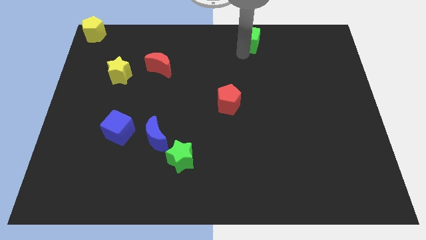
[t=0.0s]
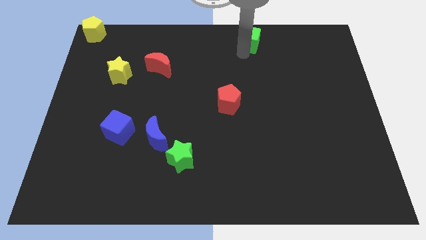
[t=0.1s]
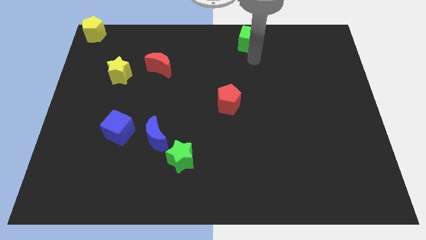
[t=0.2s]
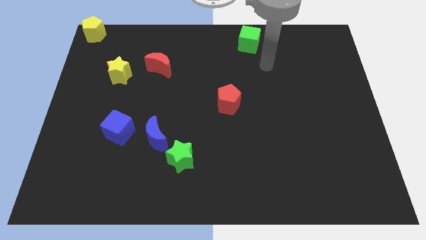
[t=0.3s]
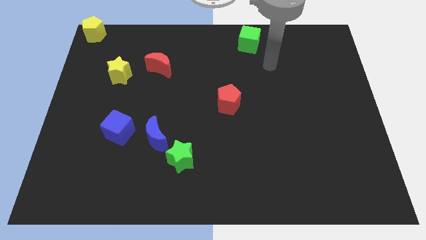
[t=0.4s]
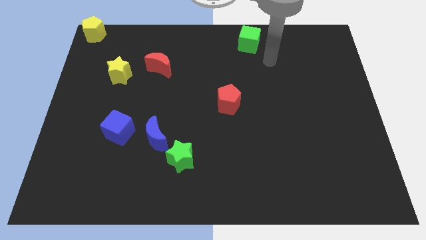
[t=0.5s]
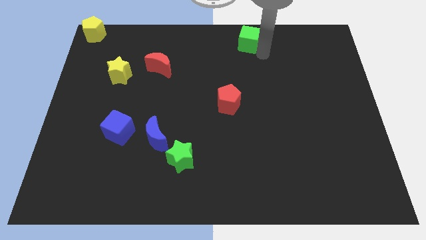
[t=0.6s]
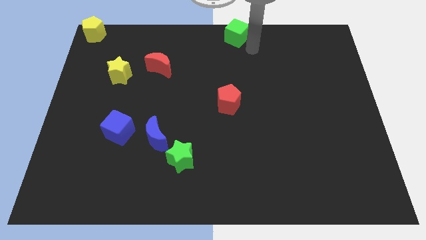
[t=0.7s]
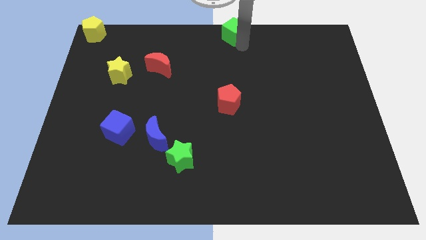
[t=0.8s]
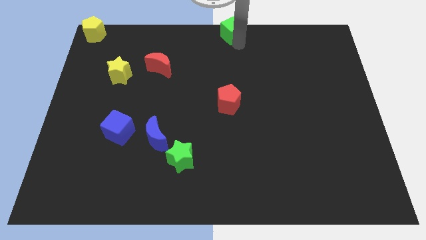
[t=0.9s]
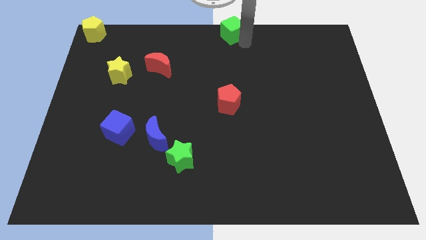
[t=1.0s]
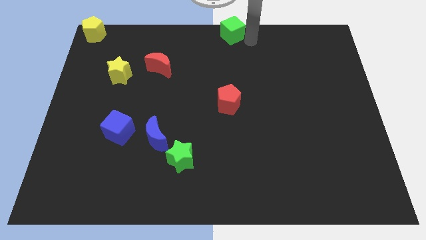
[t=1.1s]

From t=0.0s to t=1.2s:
move the green cube to the top center

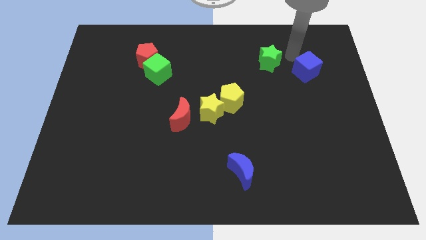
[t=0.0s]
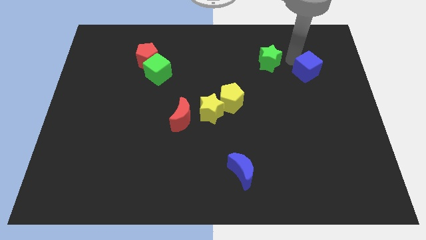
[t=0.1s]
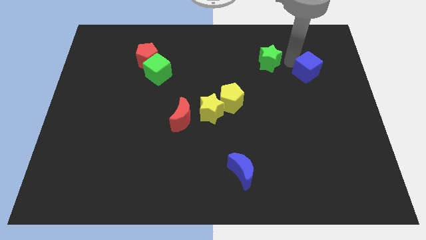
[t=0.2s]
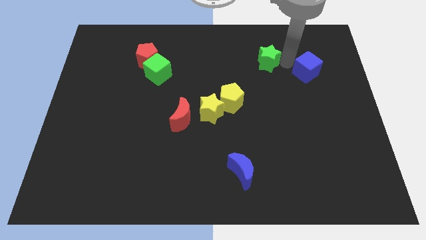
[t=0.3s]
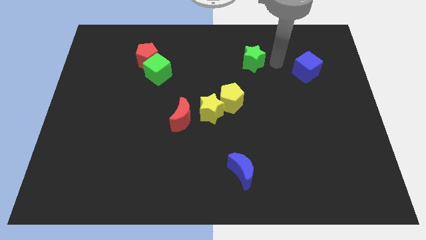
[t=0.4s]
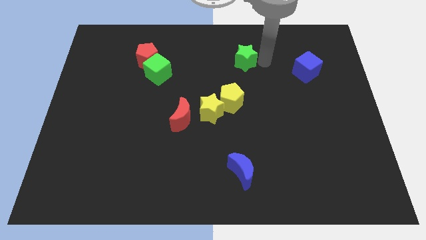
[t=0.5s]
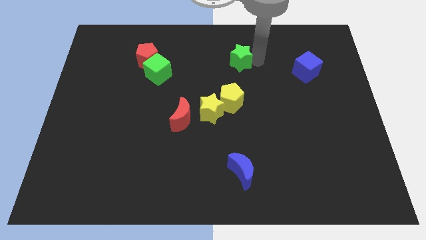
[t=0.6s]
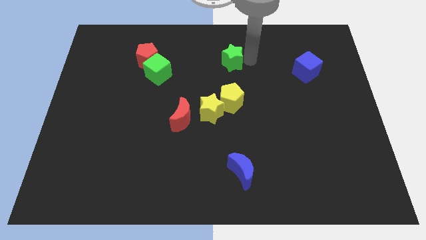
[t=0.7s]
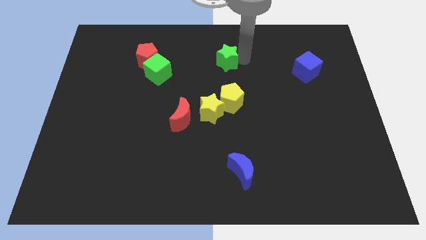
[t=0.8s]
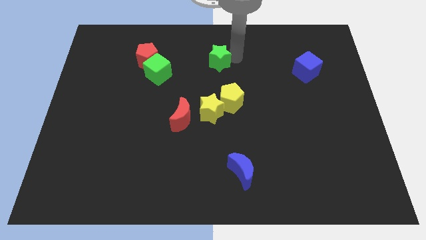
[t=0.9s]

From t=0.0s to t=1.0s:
separate the green star from blue cube

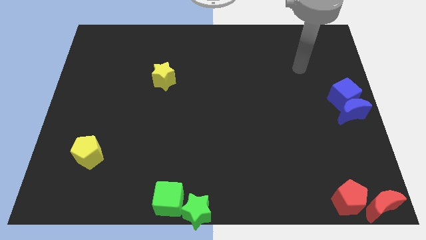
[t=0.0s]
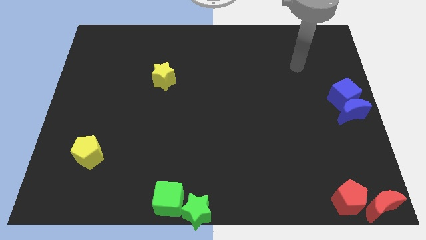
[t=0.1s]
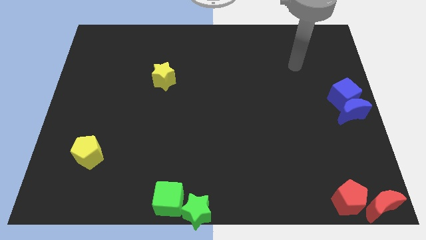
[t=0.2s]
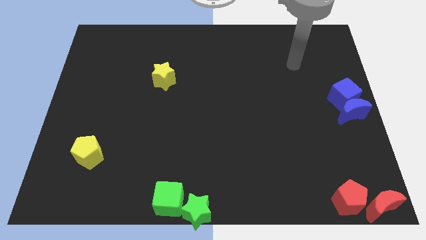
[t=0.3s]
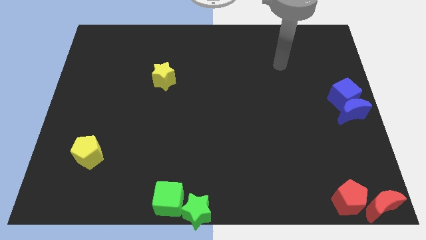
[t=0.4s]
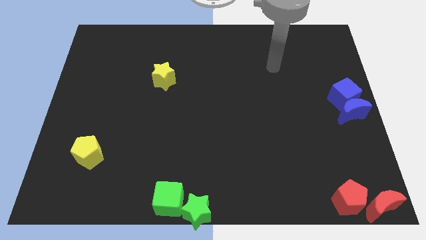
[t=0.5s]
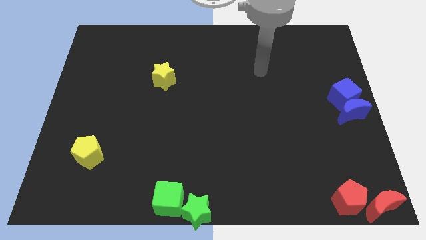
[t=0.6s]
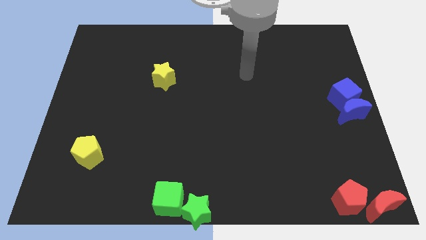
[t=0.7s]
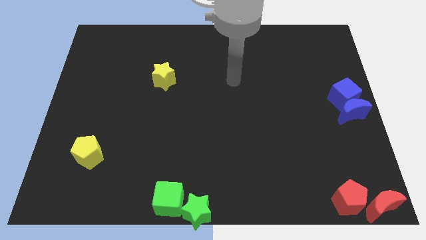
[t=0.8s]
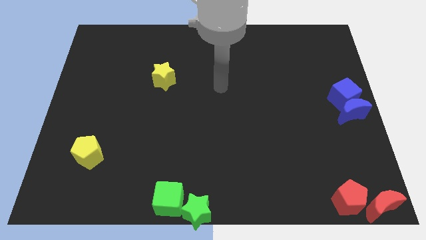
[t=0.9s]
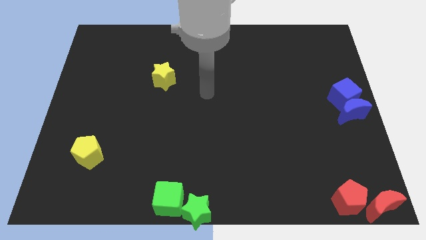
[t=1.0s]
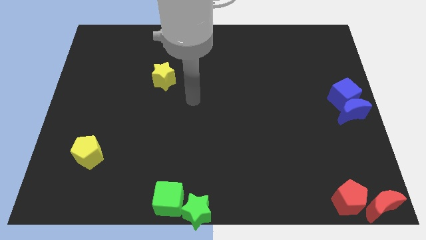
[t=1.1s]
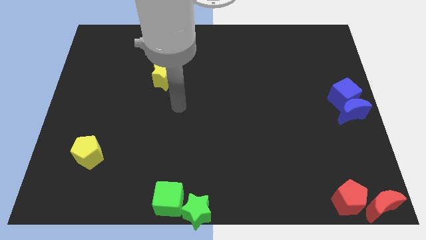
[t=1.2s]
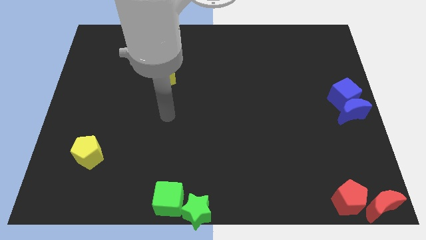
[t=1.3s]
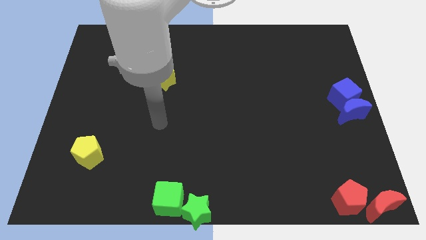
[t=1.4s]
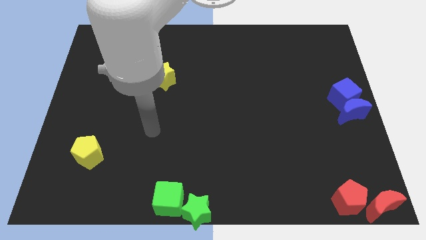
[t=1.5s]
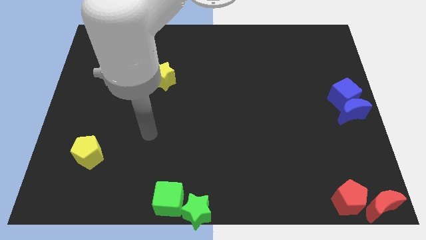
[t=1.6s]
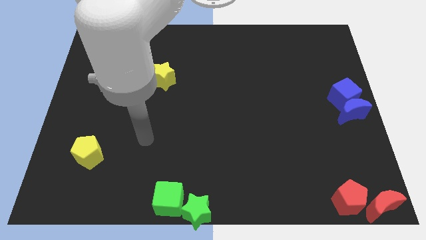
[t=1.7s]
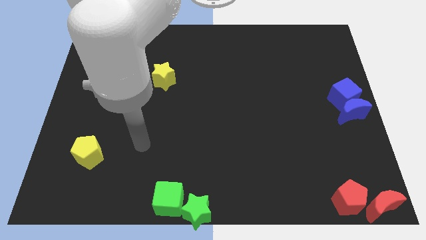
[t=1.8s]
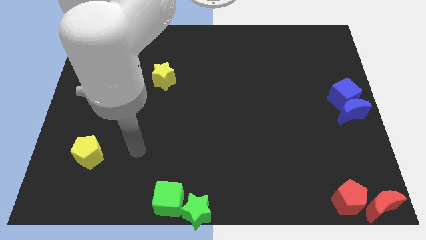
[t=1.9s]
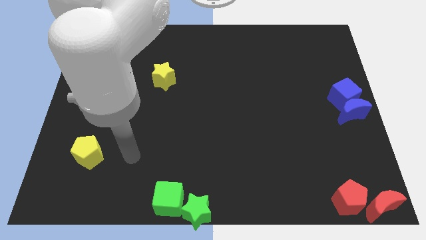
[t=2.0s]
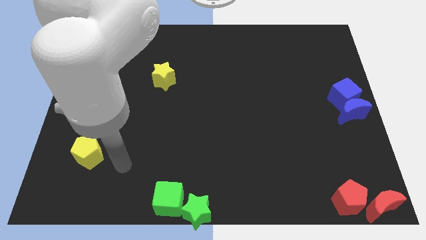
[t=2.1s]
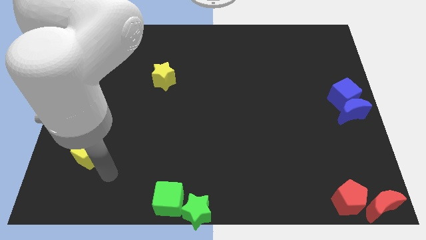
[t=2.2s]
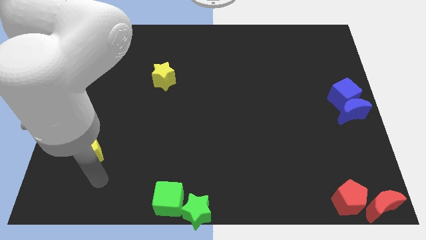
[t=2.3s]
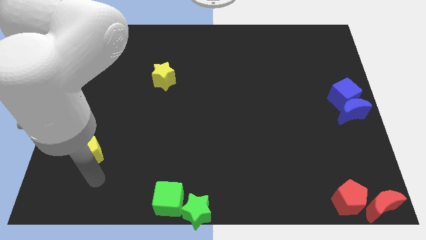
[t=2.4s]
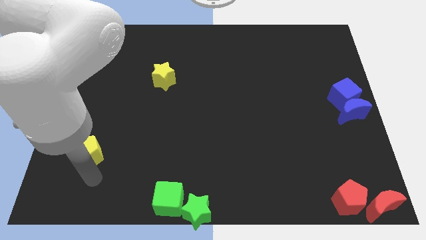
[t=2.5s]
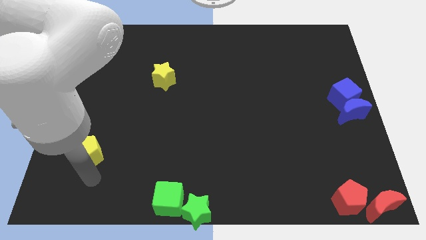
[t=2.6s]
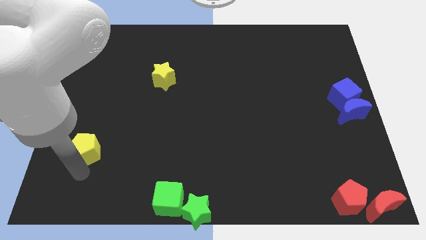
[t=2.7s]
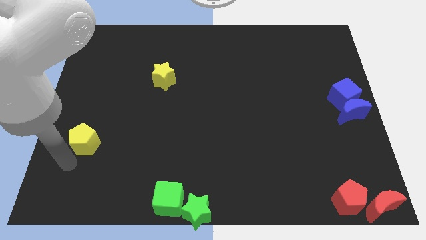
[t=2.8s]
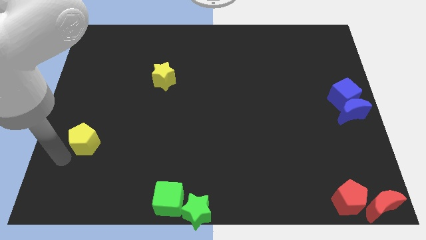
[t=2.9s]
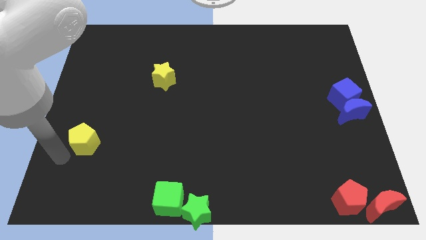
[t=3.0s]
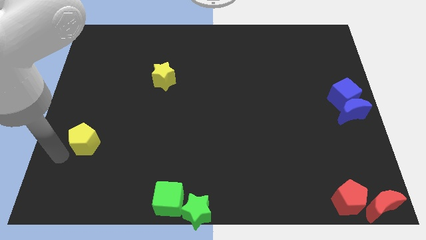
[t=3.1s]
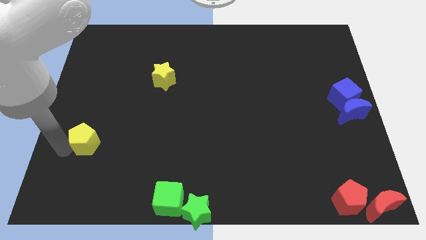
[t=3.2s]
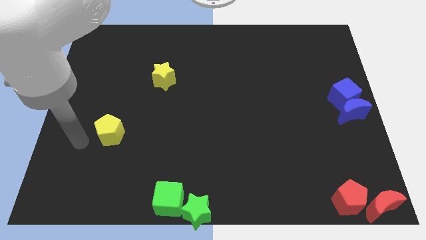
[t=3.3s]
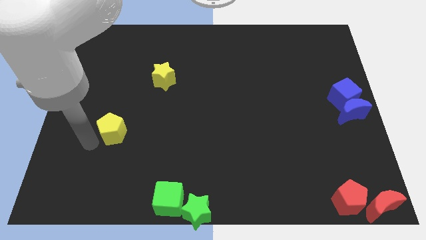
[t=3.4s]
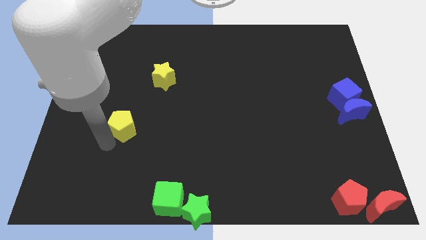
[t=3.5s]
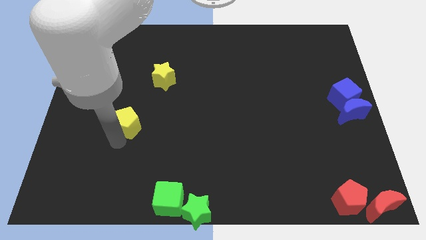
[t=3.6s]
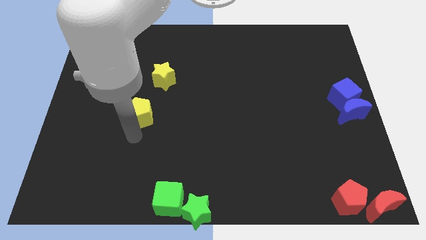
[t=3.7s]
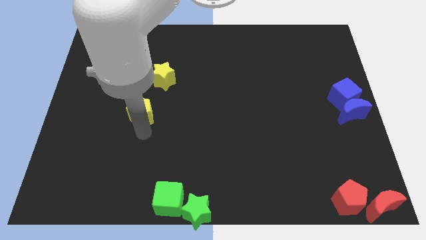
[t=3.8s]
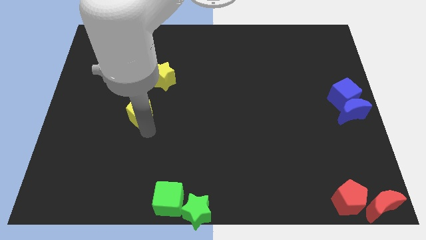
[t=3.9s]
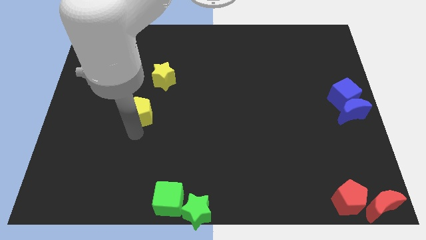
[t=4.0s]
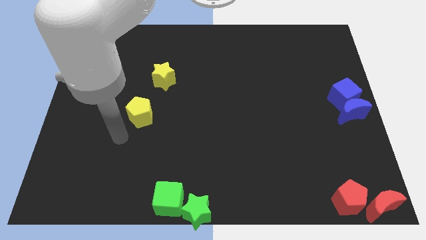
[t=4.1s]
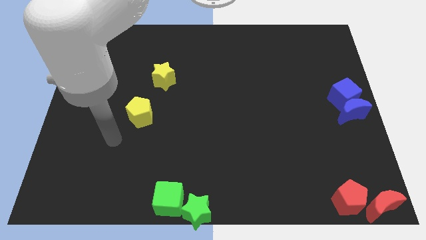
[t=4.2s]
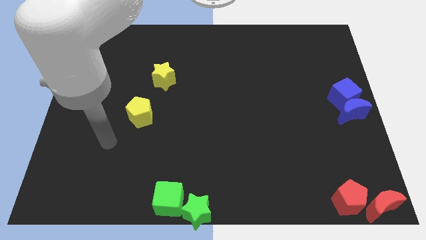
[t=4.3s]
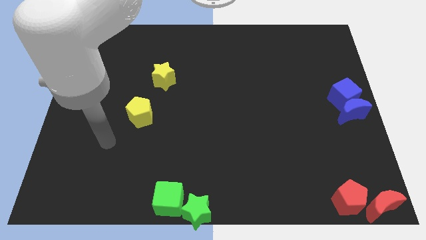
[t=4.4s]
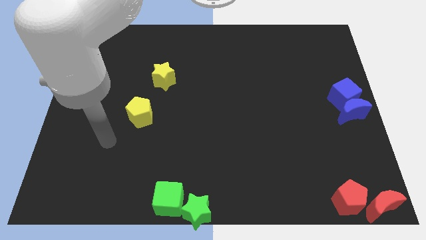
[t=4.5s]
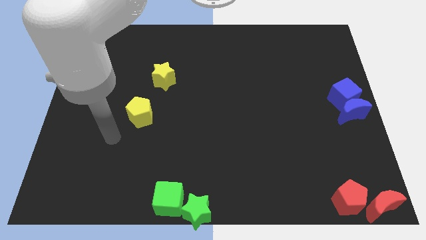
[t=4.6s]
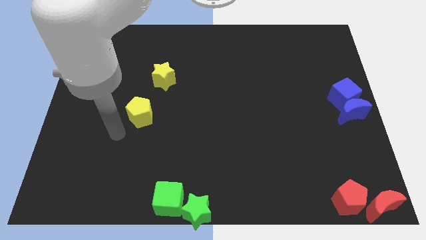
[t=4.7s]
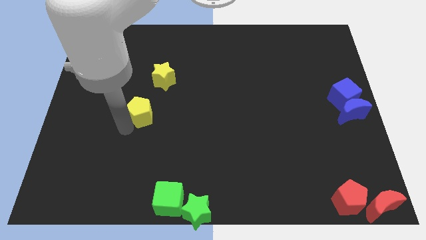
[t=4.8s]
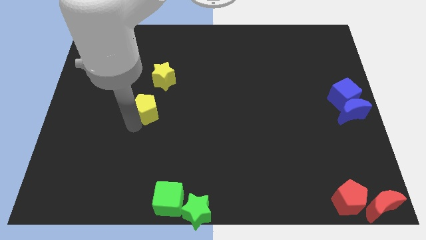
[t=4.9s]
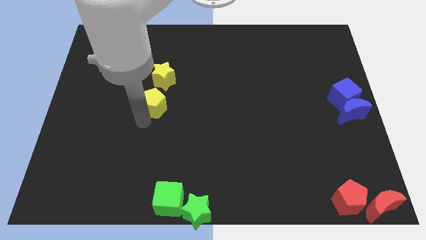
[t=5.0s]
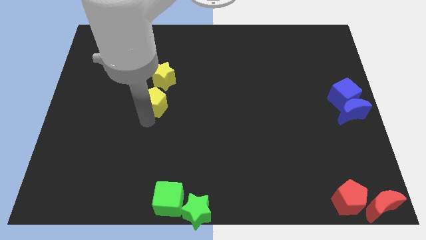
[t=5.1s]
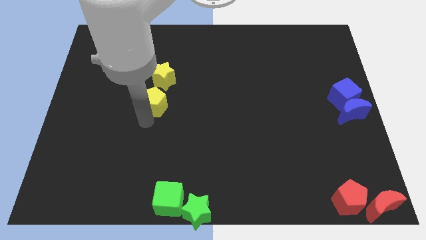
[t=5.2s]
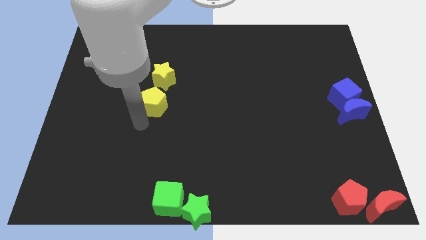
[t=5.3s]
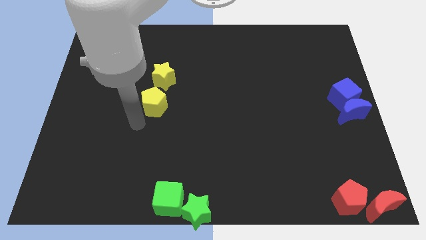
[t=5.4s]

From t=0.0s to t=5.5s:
move the yellow pentagon towards the bottom side of the yellow star

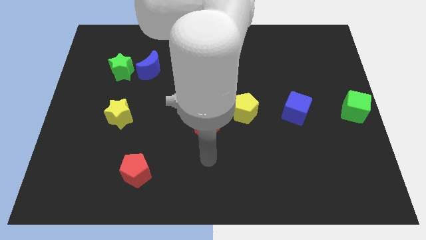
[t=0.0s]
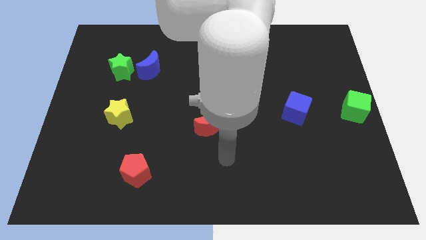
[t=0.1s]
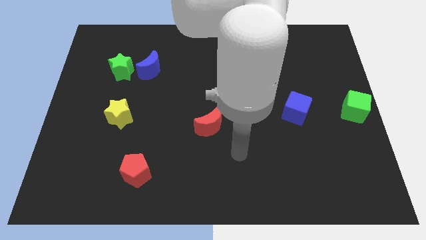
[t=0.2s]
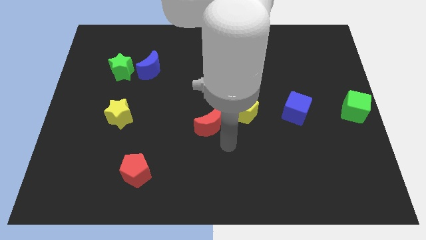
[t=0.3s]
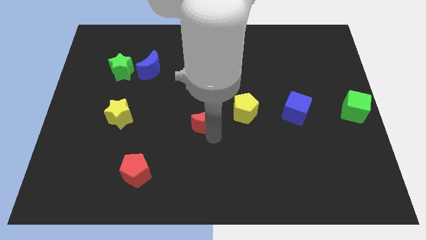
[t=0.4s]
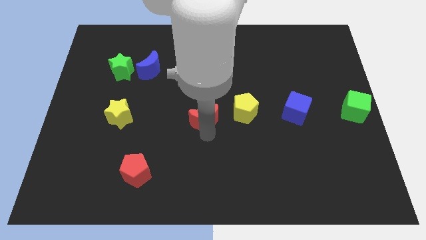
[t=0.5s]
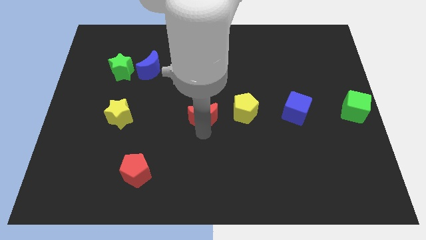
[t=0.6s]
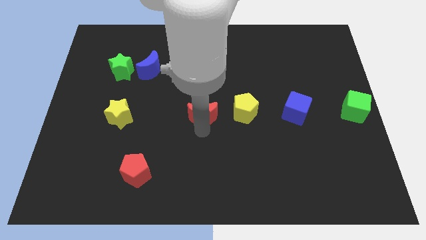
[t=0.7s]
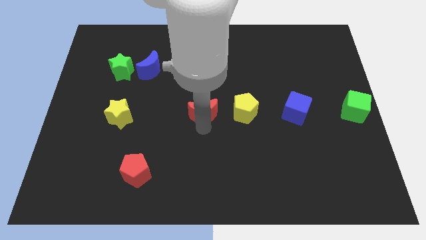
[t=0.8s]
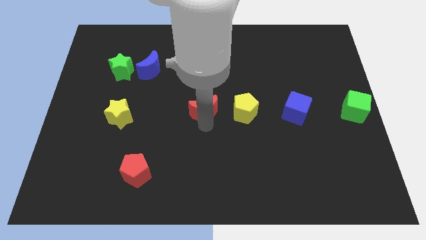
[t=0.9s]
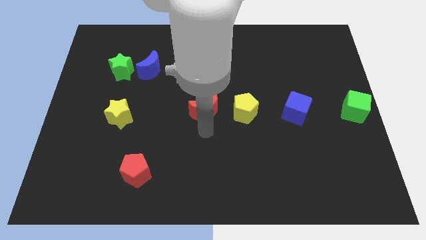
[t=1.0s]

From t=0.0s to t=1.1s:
push the red moon to the left of the yellow pentagon
